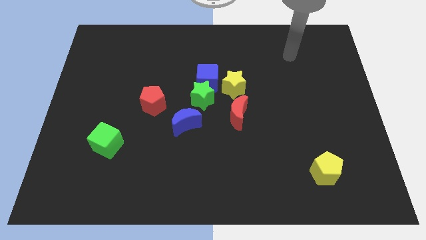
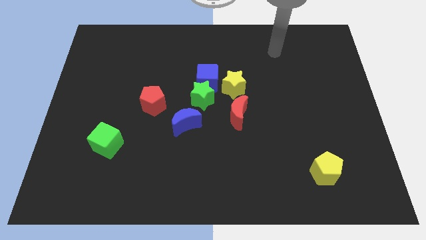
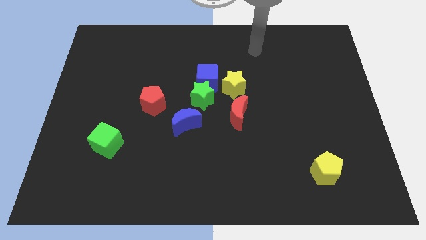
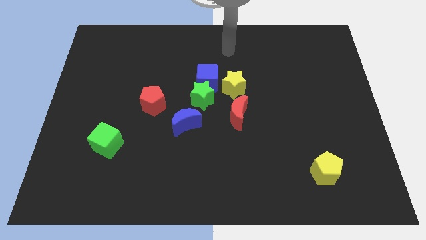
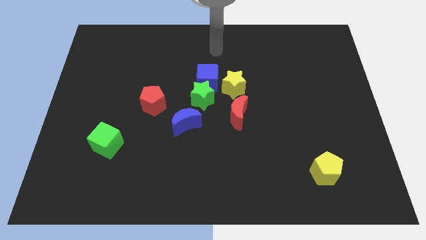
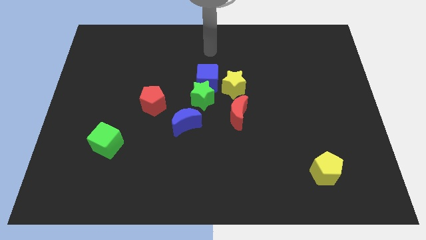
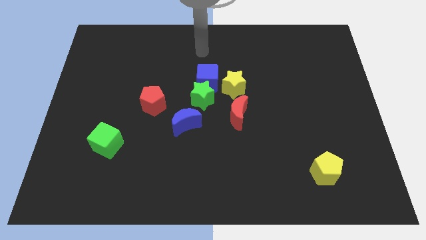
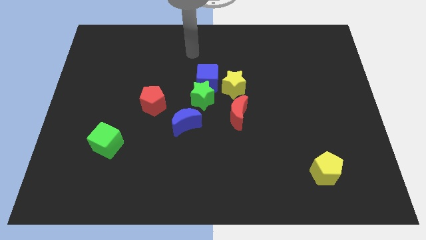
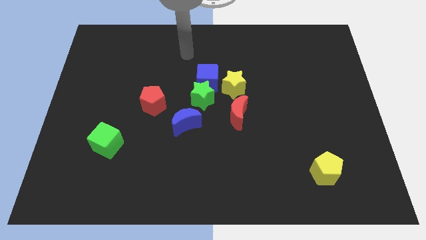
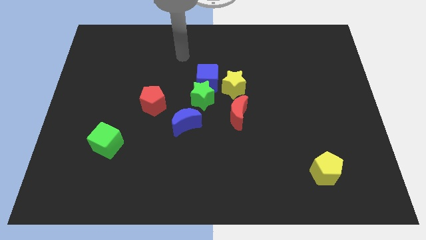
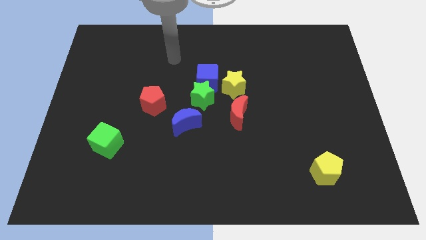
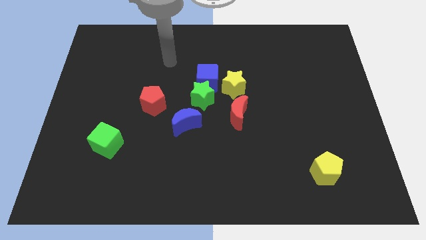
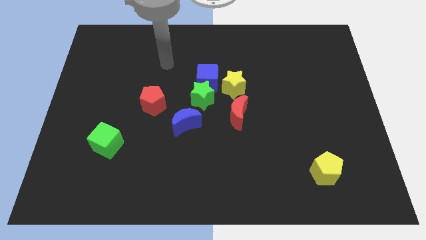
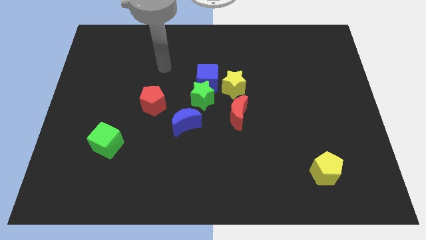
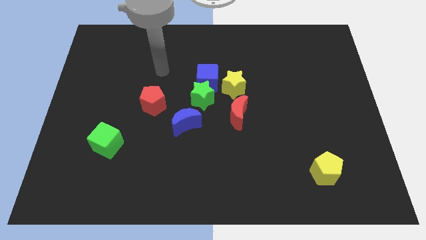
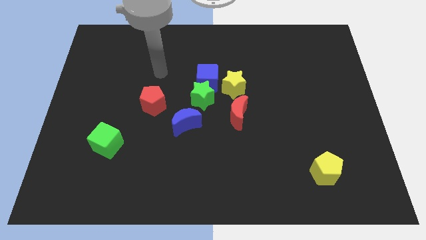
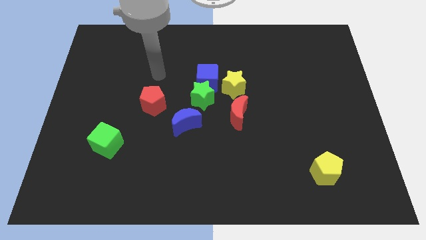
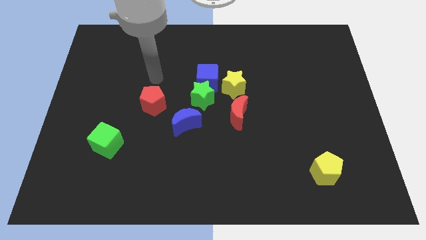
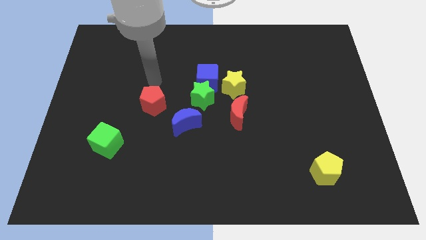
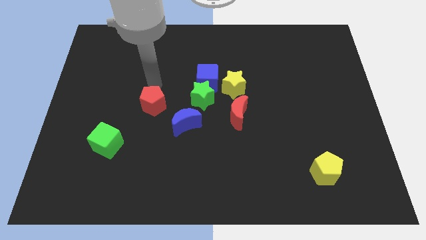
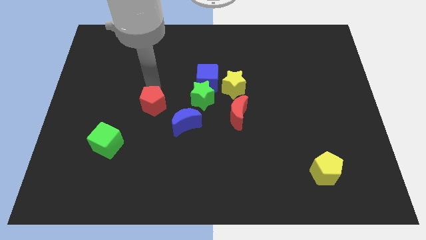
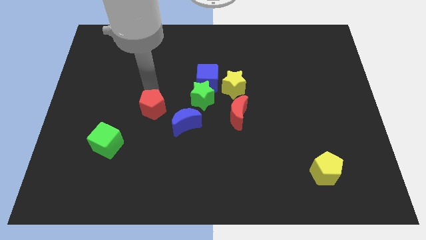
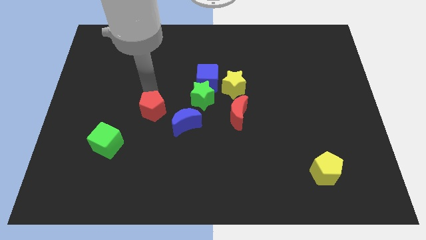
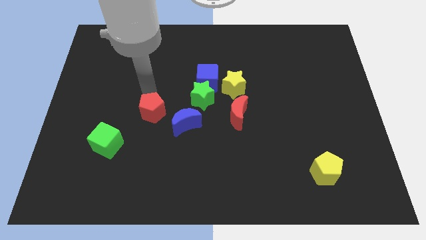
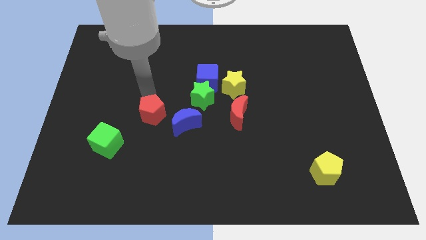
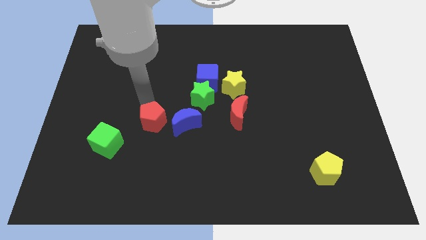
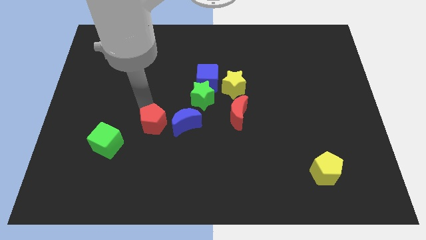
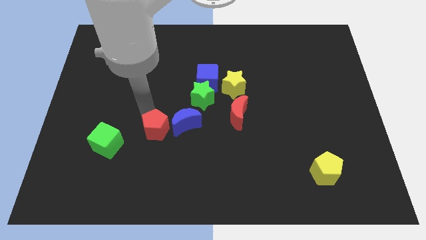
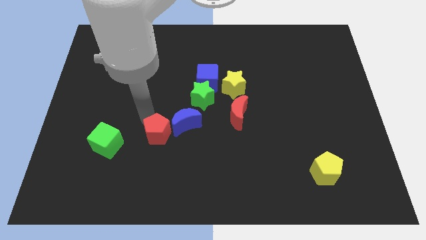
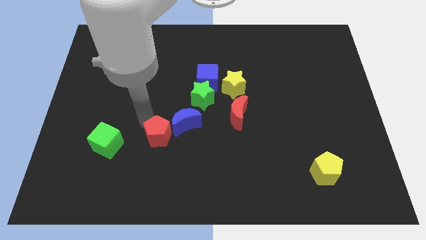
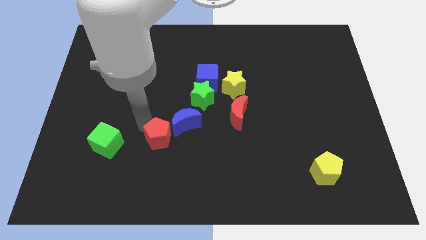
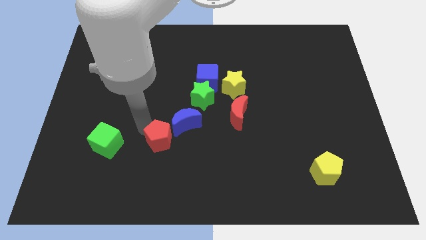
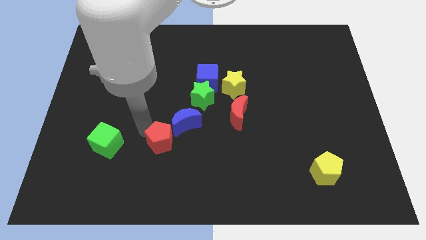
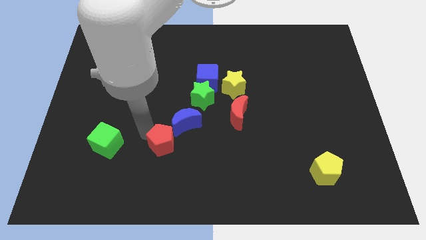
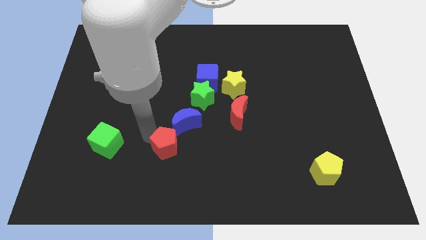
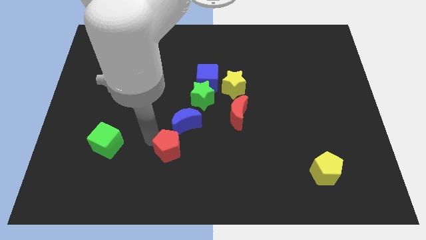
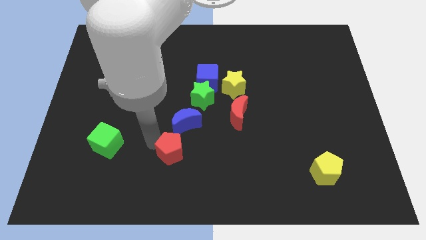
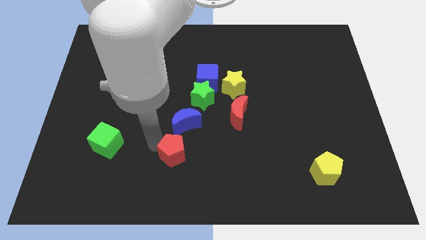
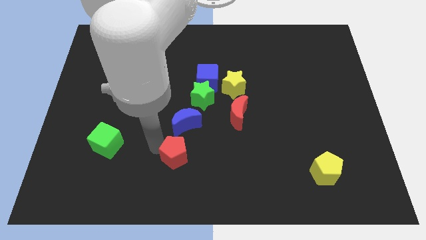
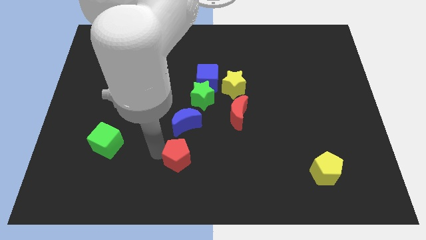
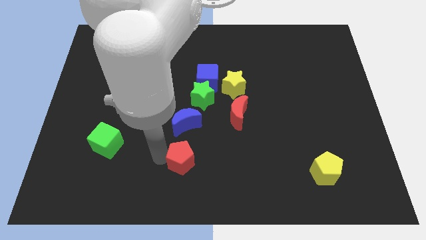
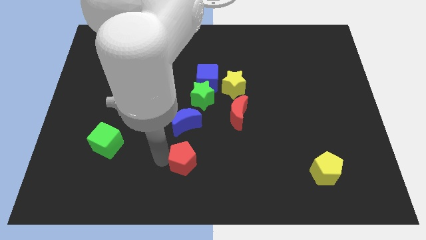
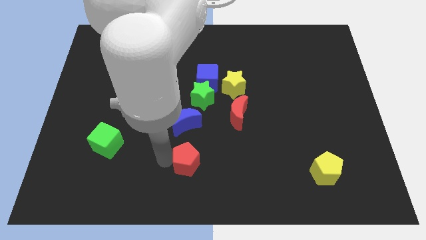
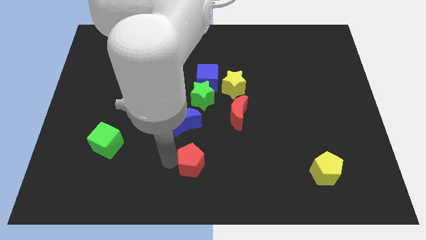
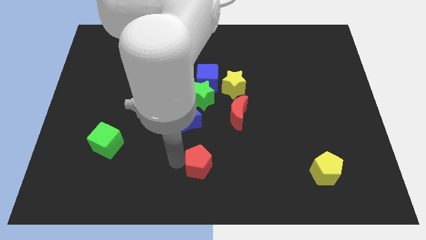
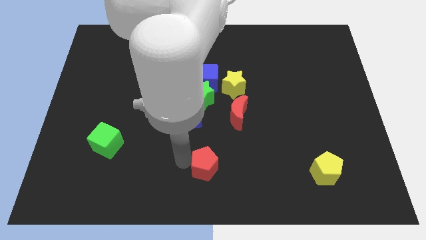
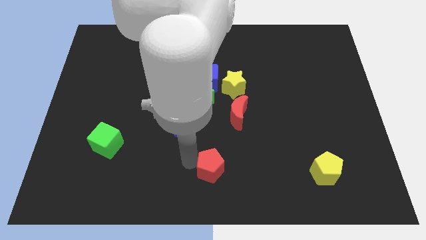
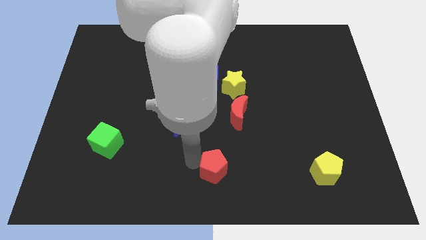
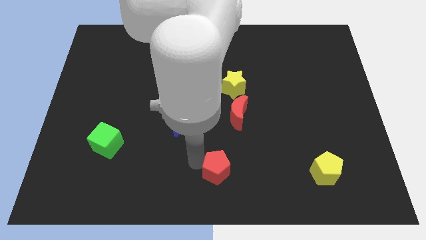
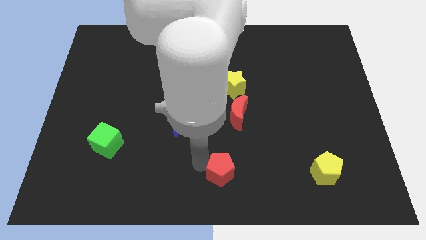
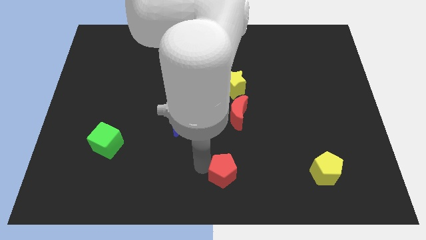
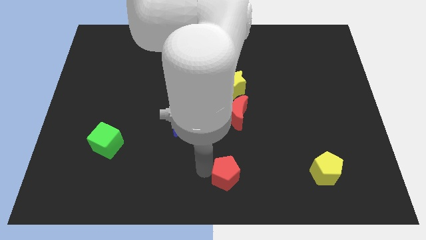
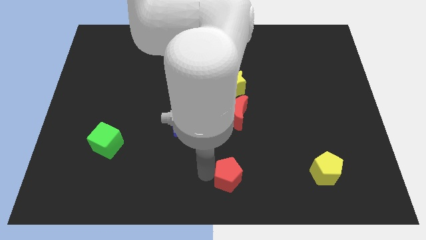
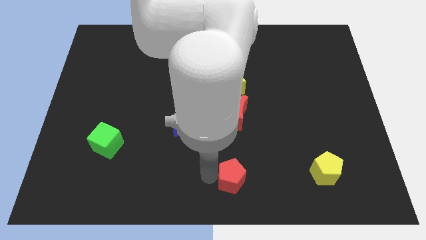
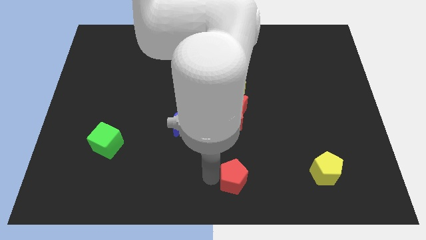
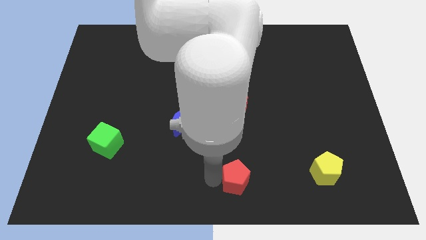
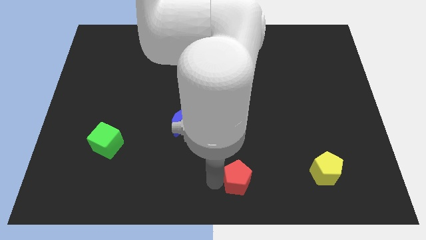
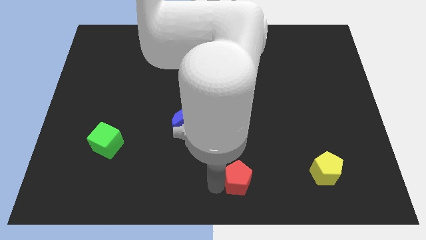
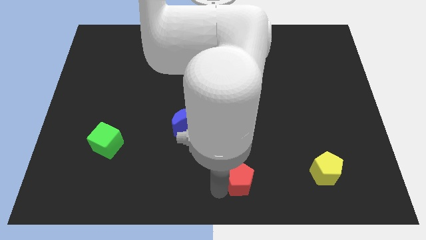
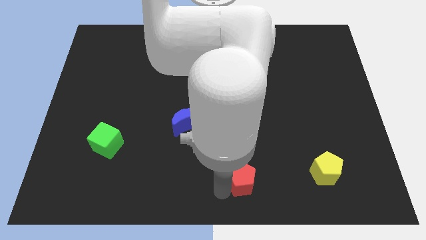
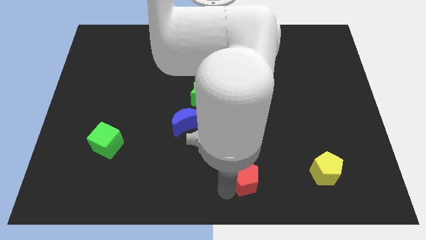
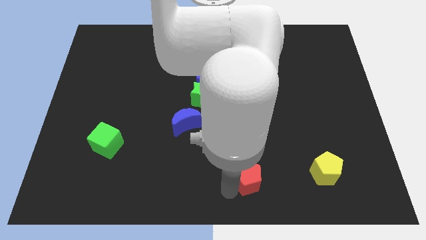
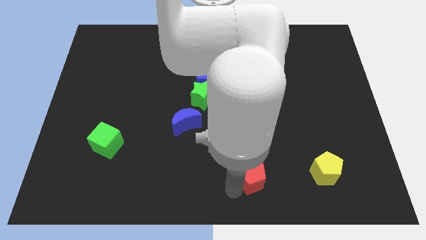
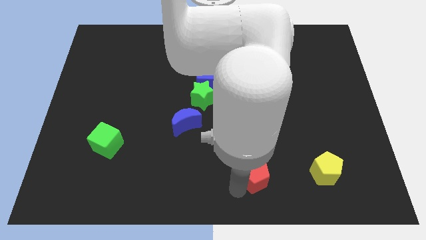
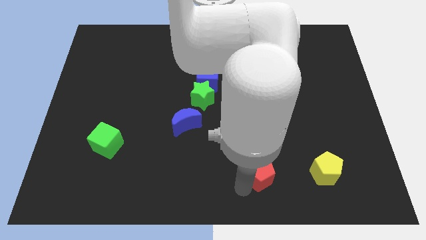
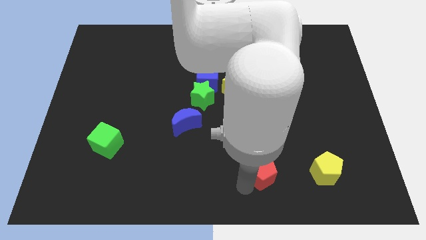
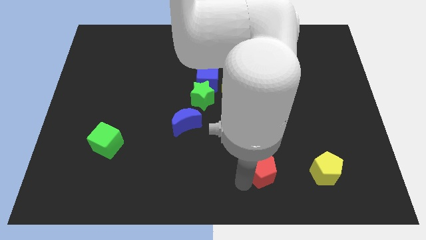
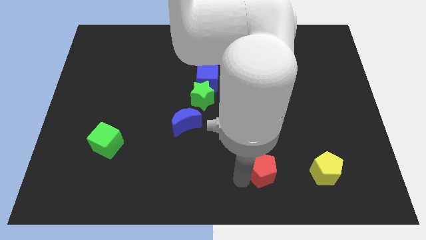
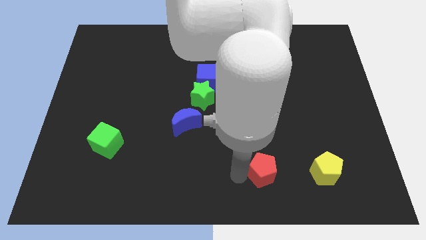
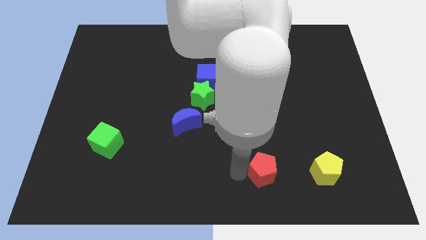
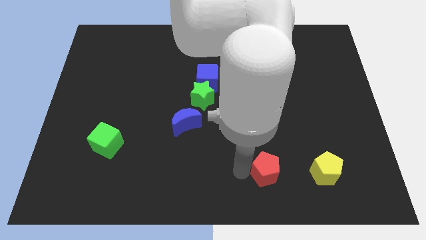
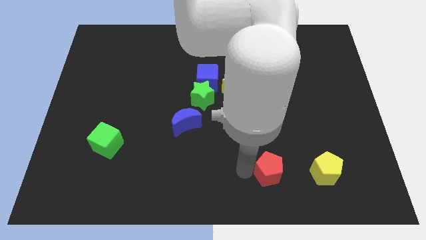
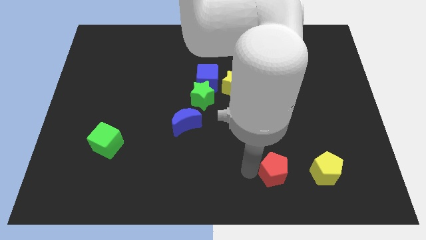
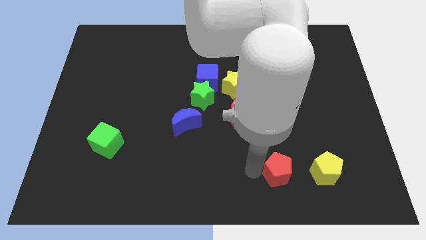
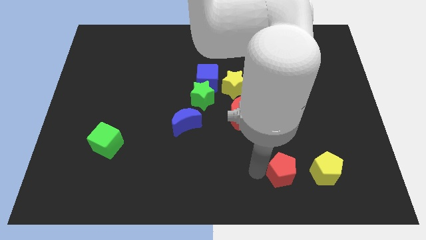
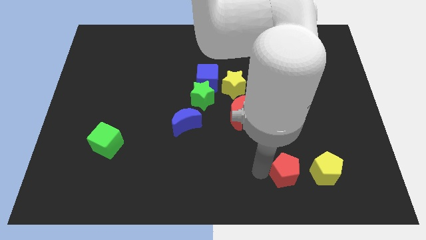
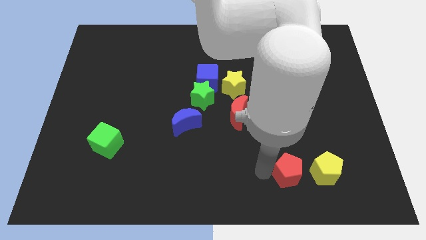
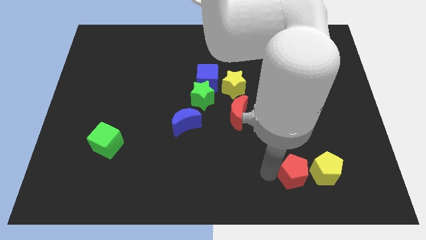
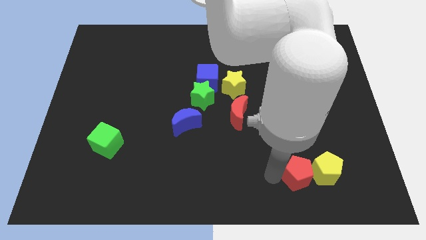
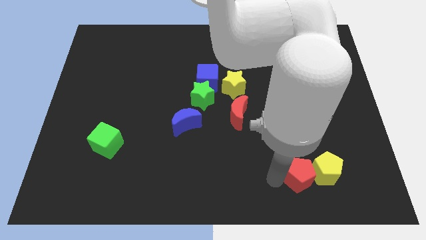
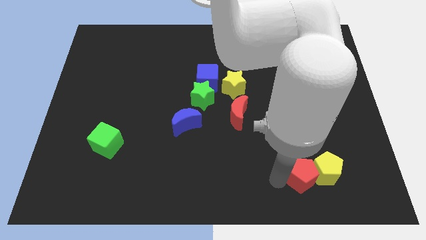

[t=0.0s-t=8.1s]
slide the red pentagon to the yellow pentagon
